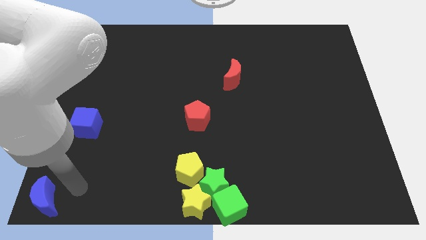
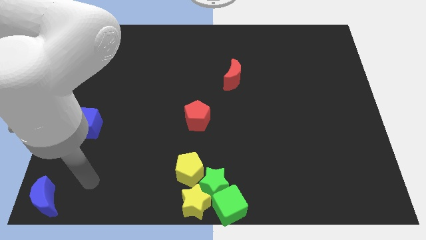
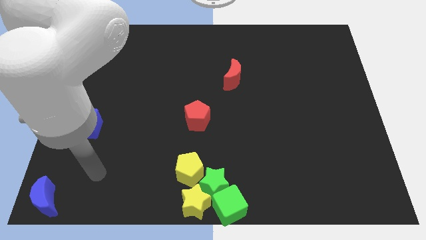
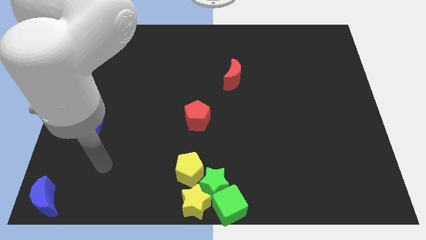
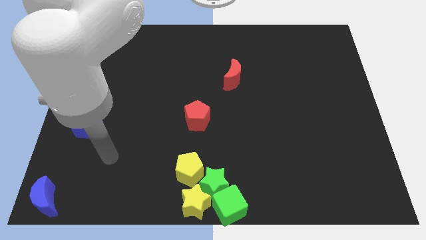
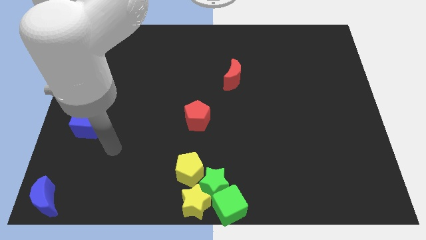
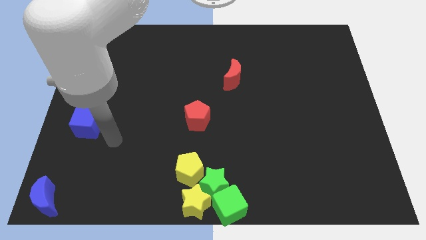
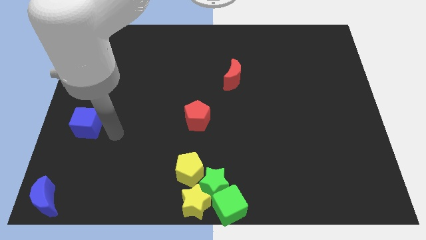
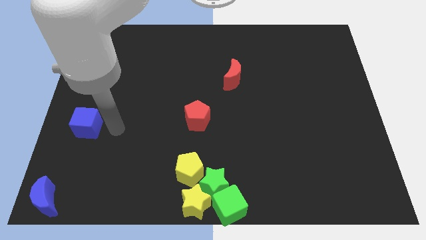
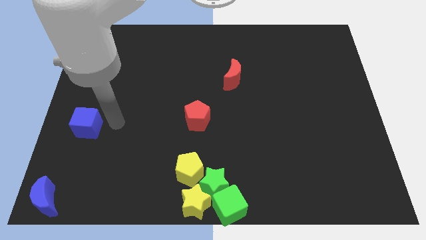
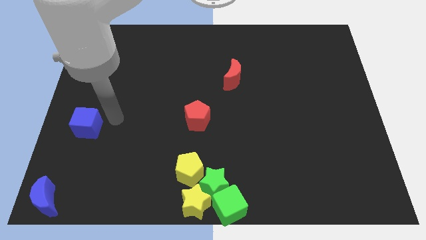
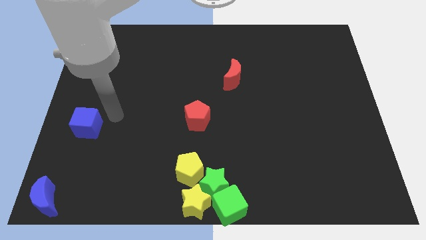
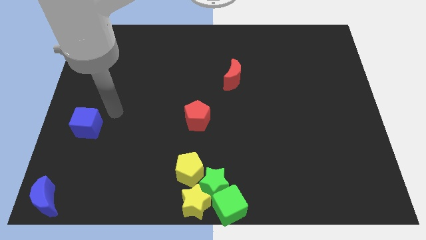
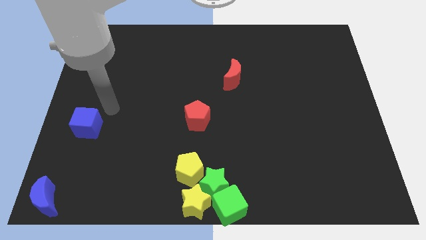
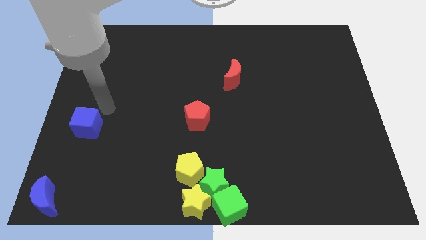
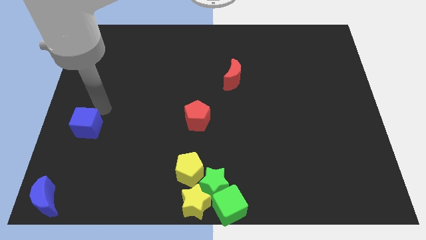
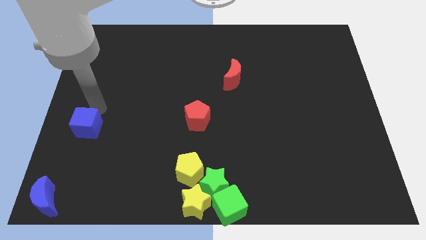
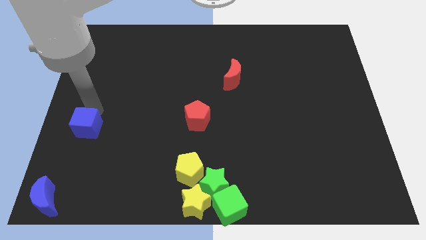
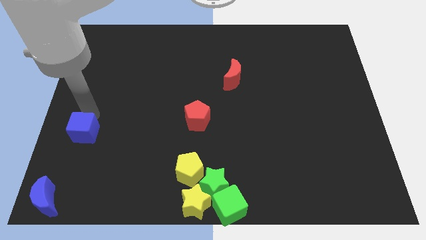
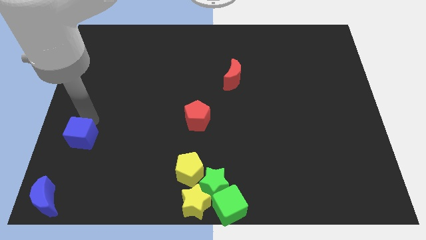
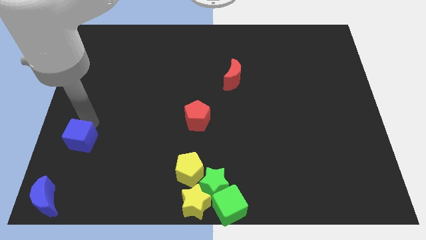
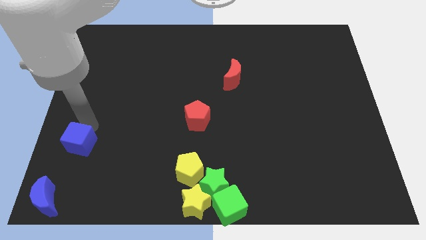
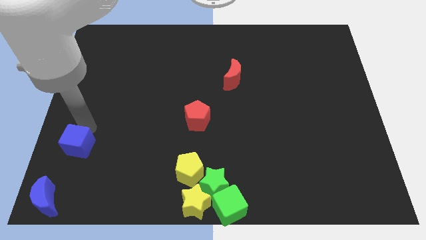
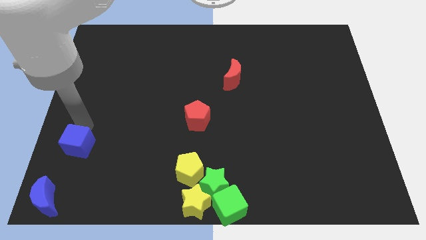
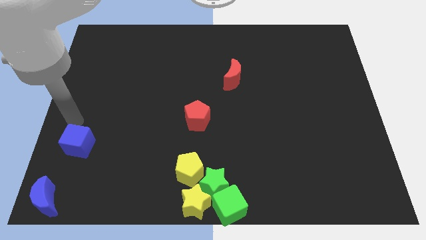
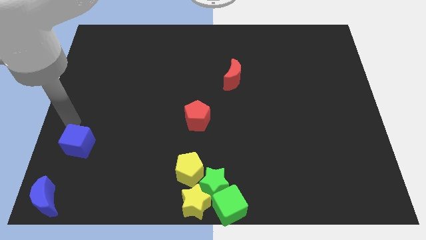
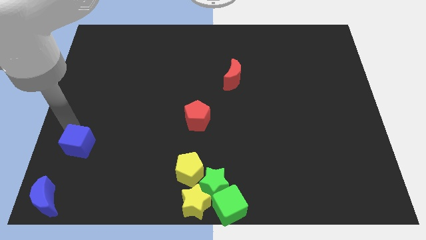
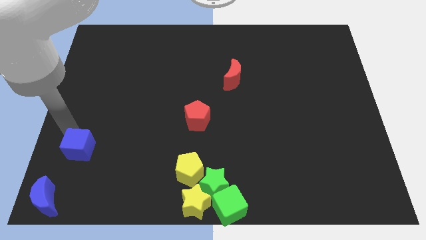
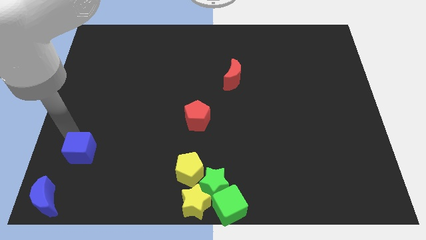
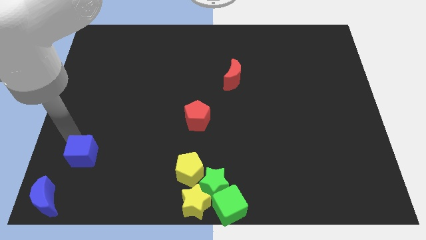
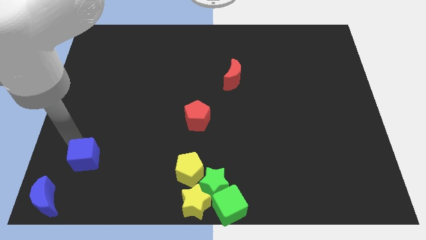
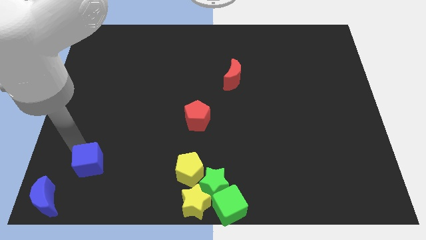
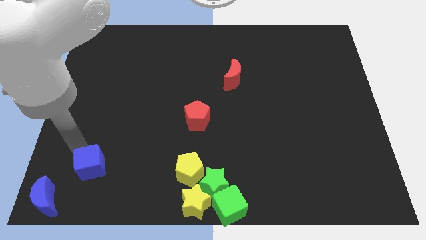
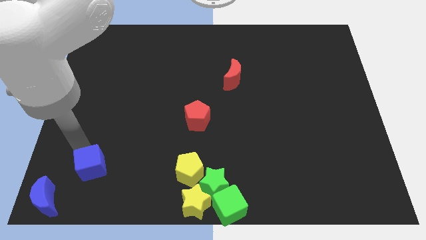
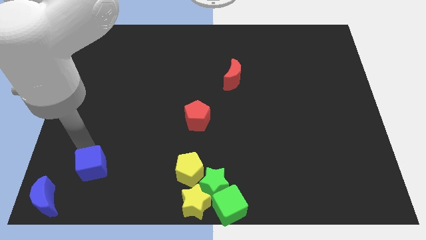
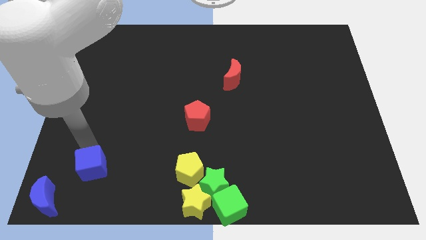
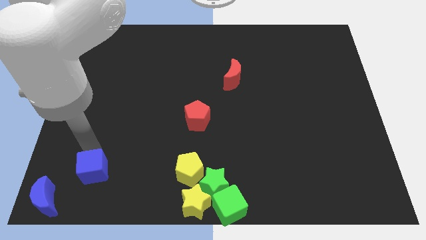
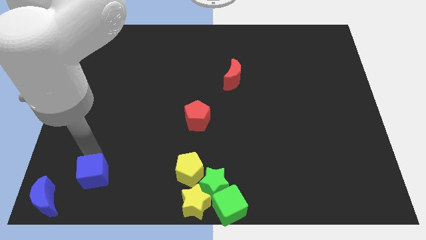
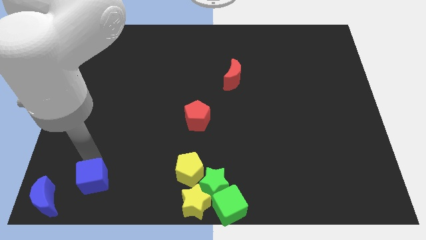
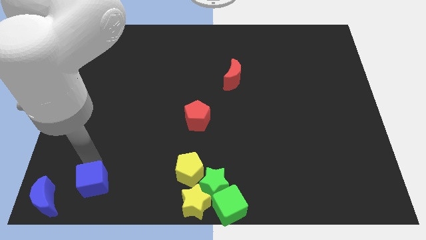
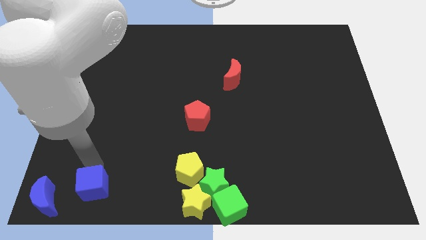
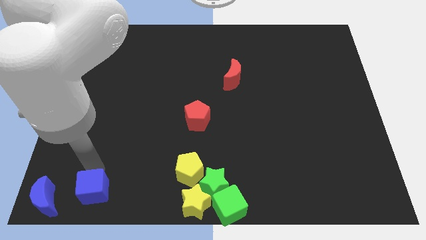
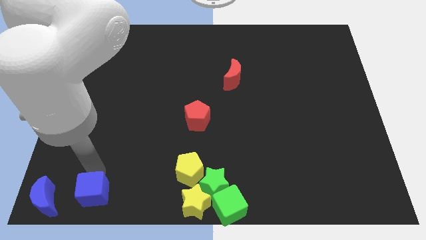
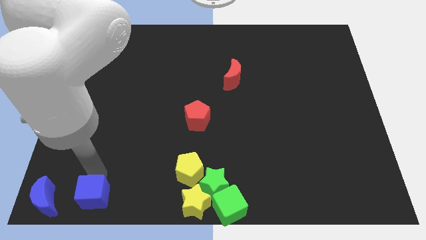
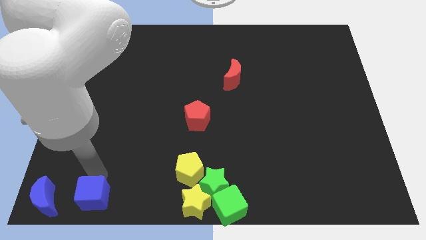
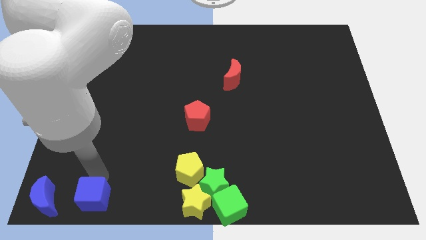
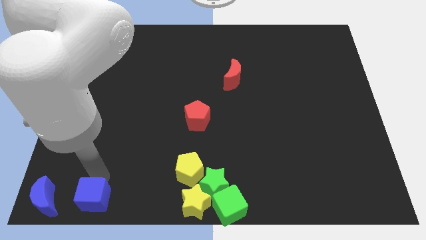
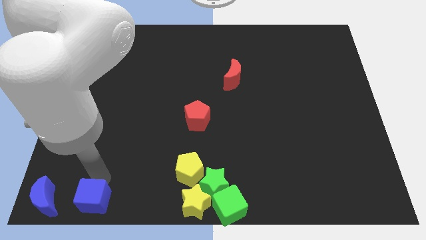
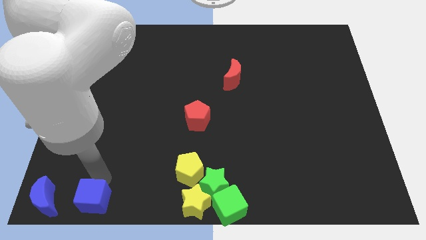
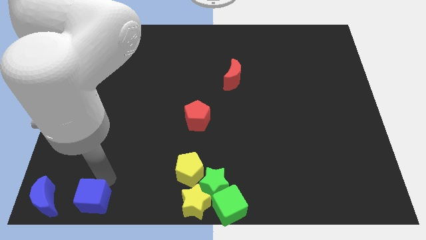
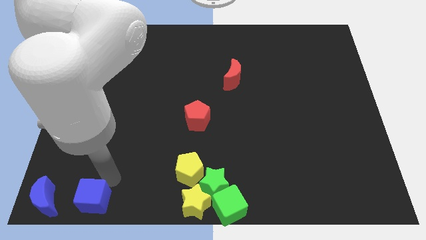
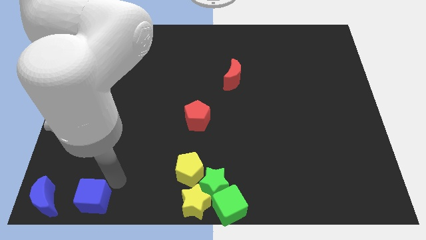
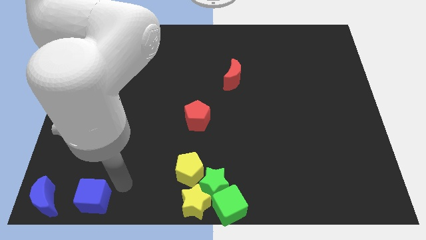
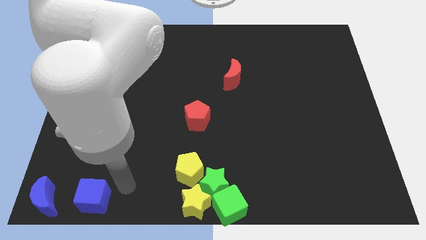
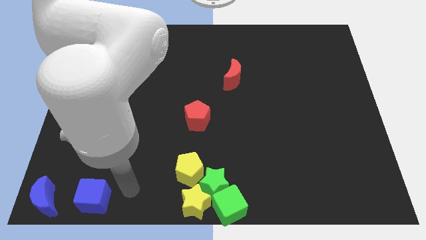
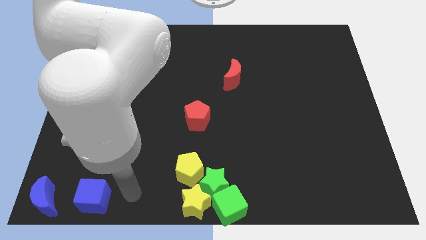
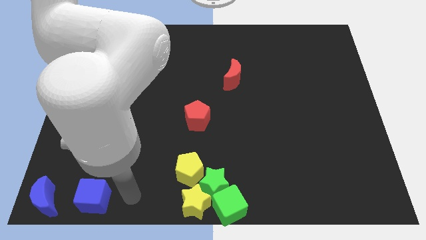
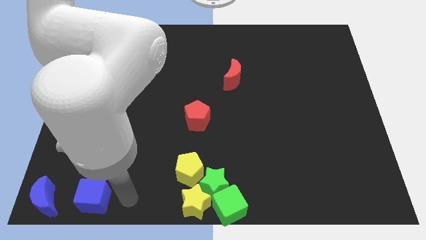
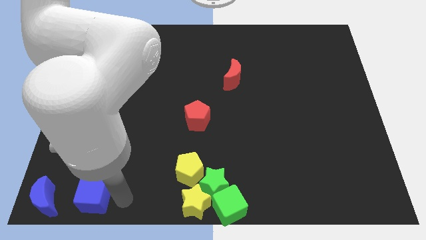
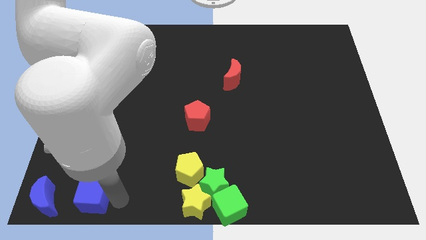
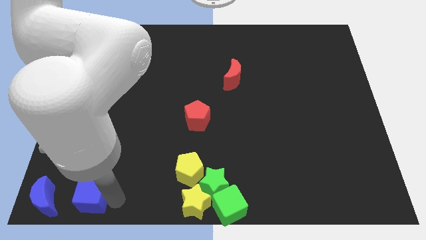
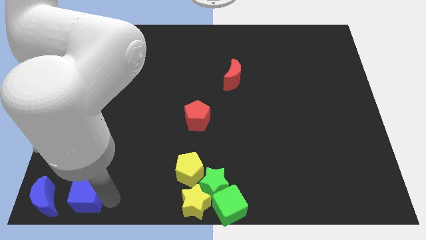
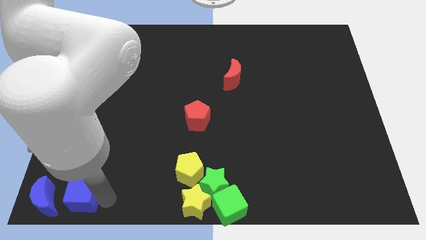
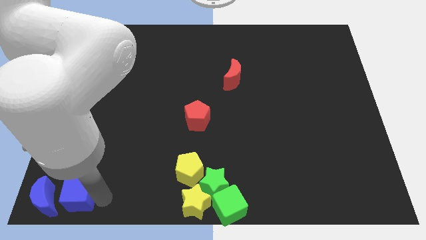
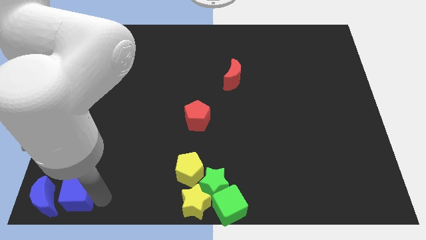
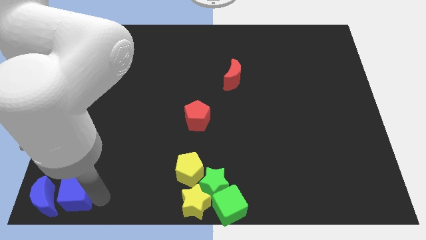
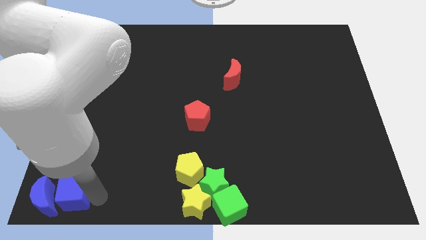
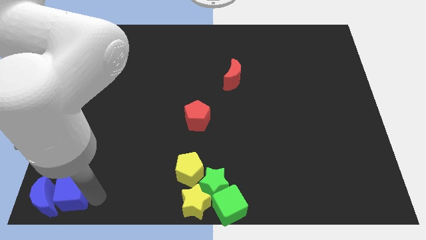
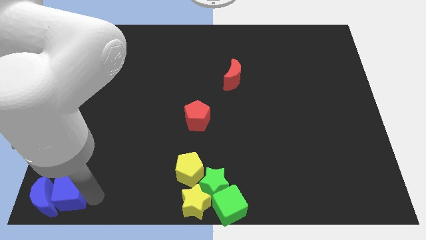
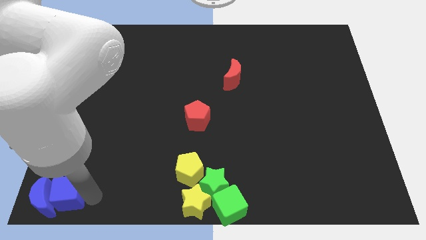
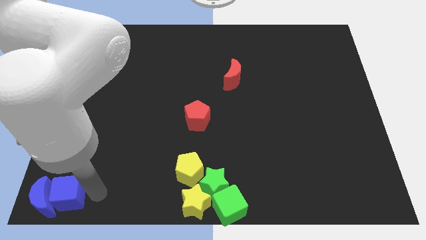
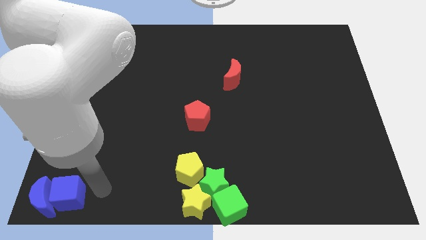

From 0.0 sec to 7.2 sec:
push the blue cube towards the blue crescent to the bottom center of the board

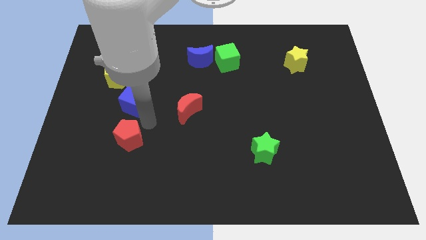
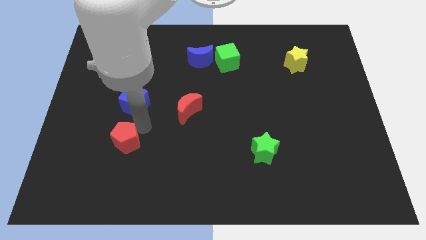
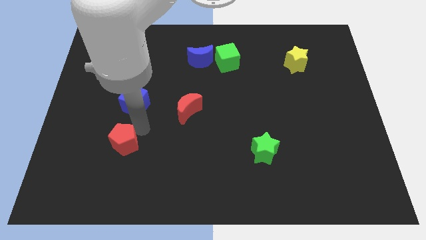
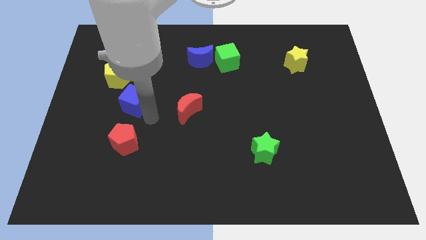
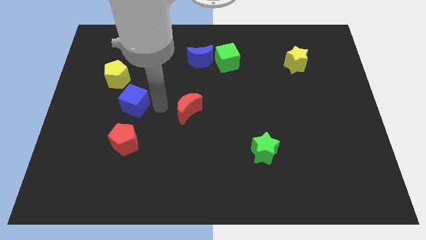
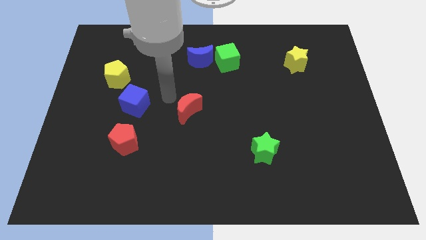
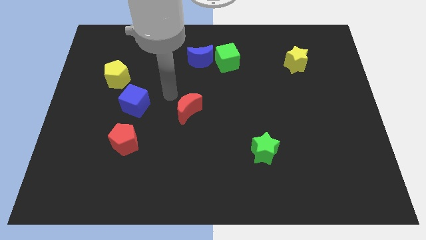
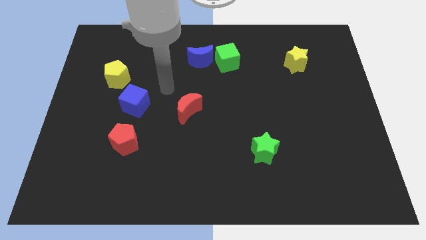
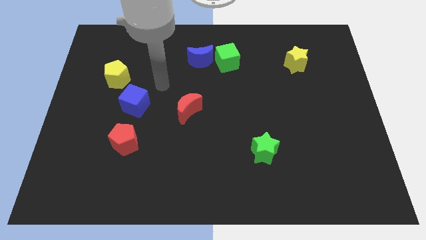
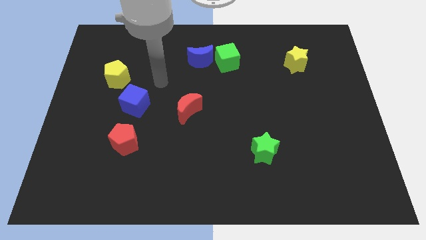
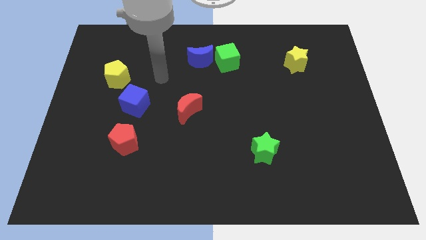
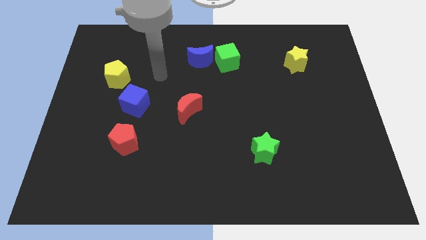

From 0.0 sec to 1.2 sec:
place your arm to the right side of yellow pentagon

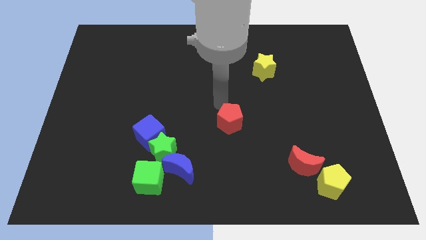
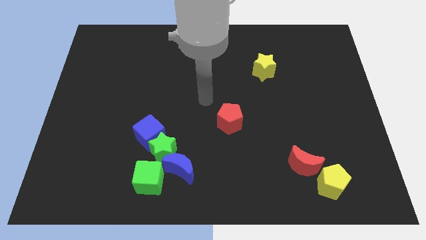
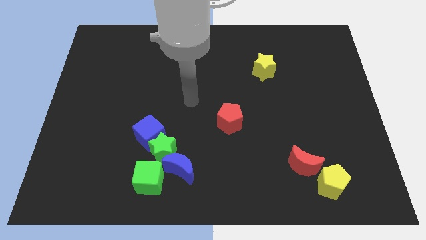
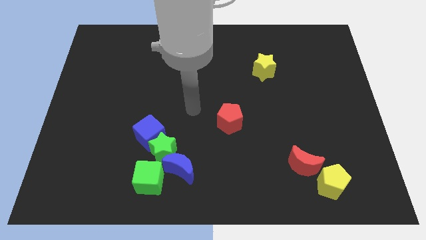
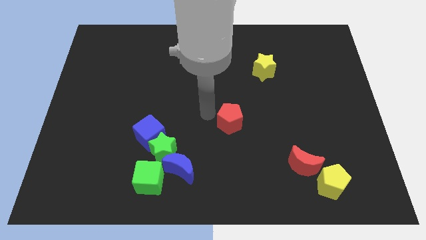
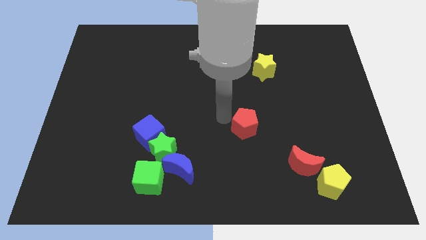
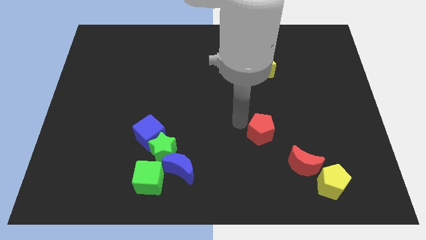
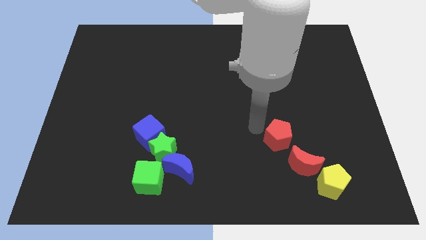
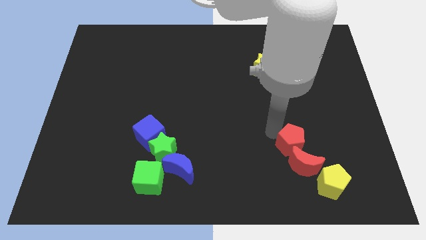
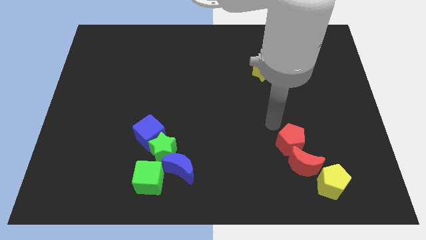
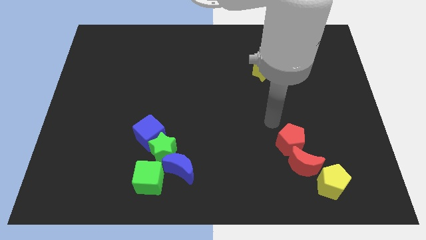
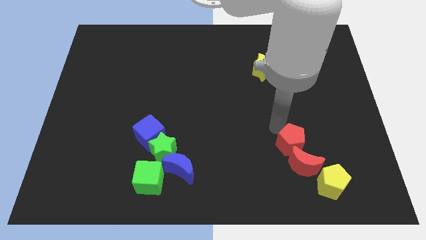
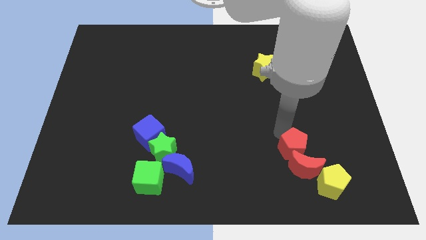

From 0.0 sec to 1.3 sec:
push the red pentagon into the red moon
